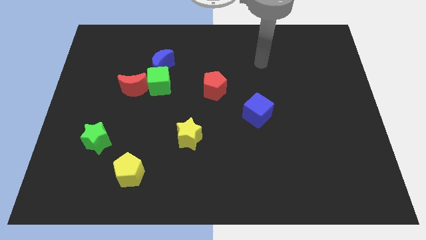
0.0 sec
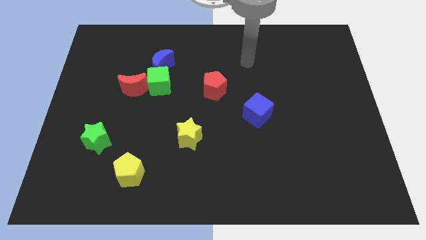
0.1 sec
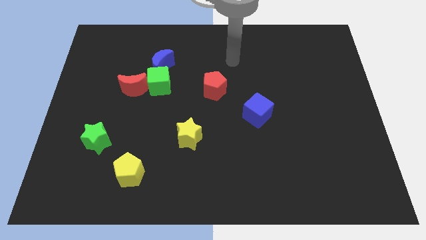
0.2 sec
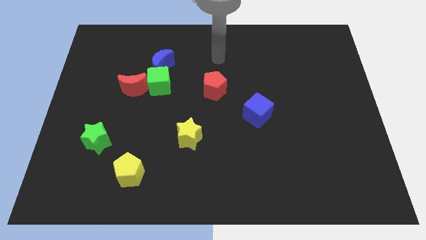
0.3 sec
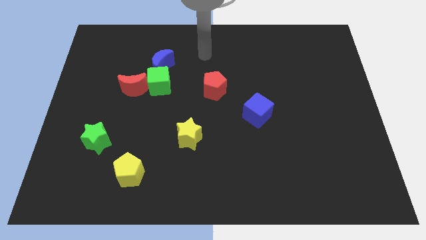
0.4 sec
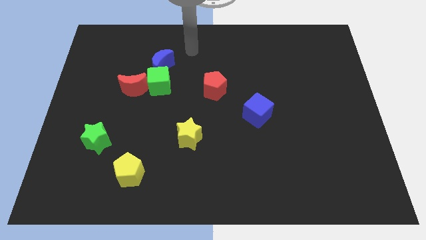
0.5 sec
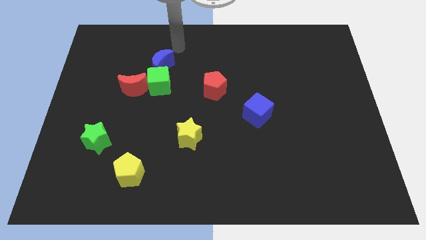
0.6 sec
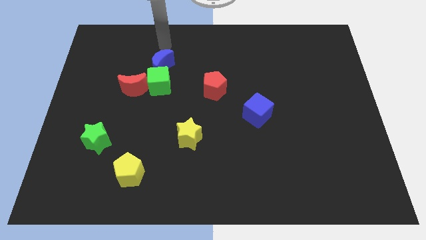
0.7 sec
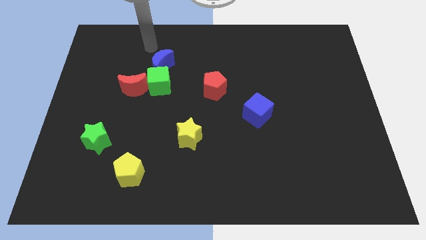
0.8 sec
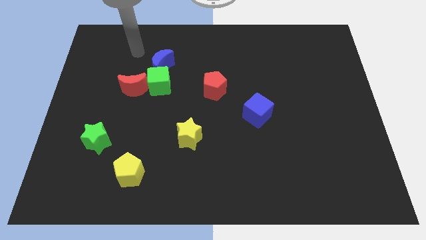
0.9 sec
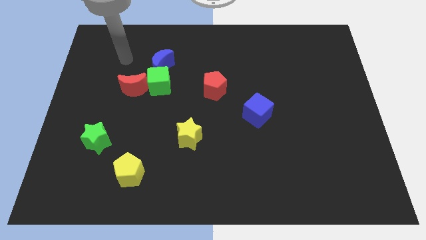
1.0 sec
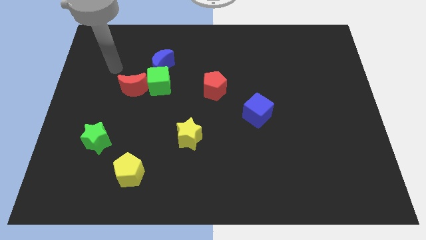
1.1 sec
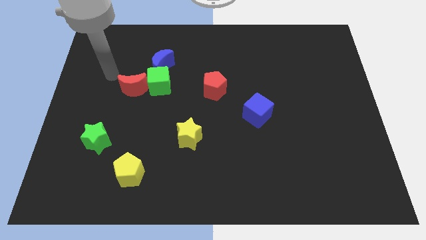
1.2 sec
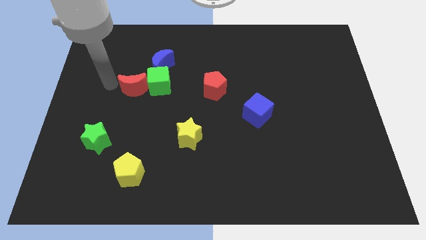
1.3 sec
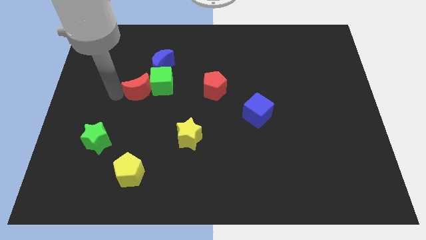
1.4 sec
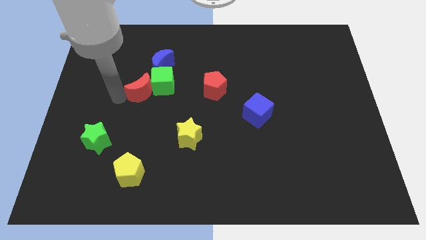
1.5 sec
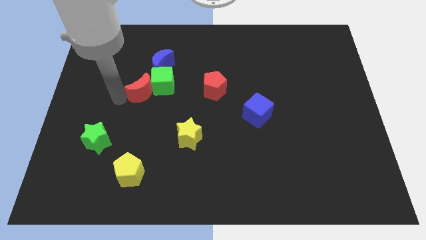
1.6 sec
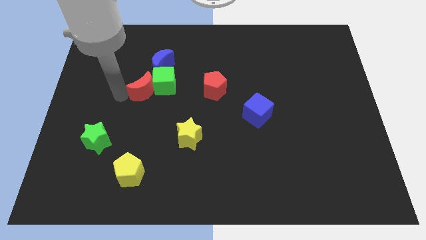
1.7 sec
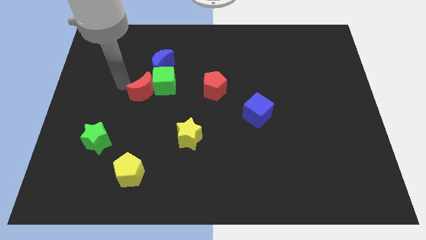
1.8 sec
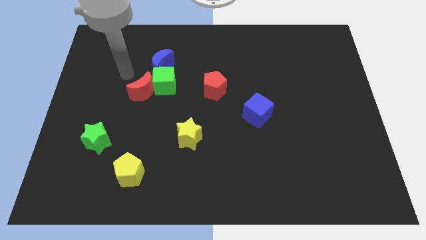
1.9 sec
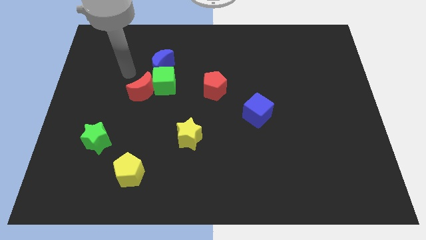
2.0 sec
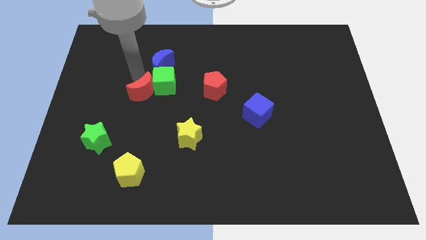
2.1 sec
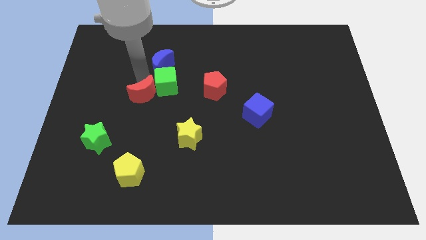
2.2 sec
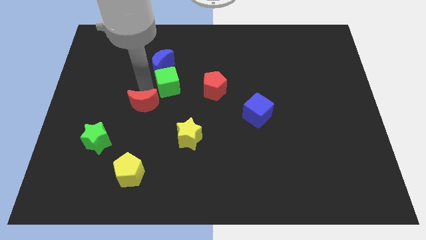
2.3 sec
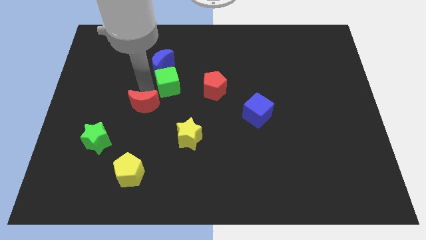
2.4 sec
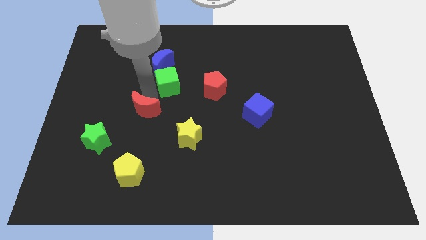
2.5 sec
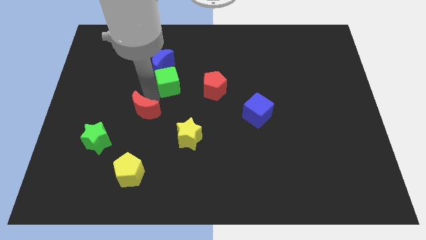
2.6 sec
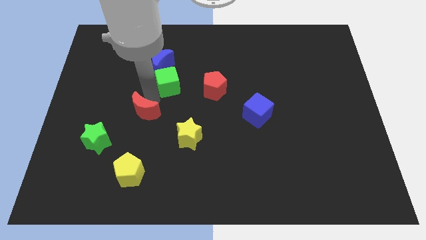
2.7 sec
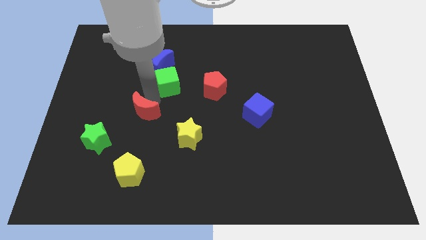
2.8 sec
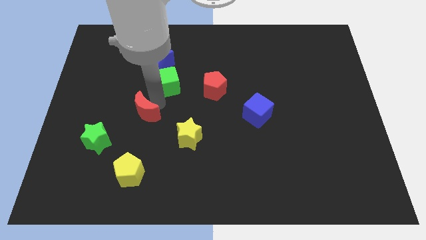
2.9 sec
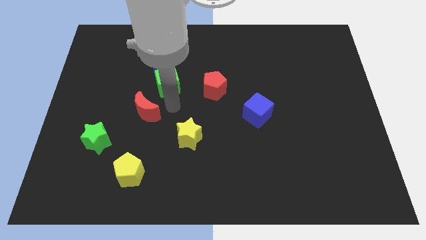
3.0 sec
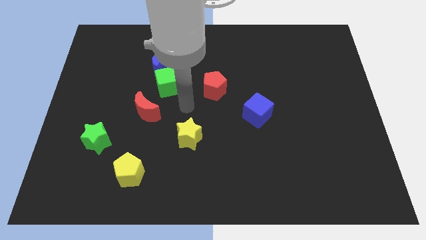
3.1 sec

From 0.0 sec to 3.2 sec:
move the red crescent to the bottom left side of the green cube

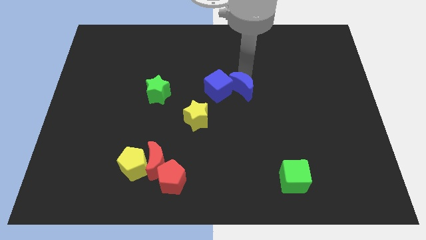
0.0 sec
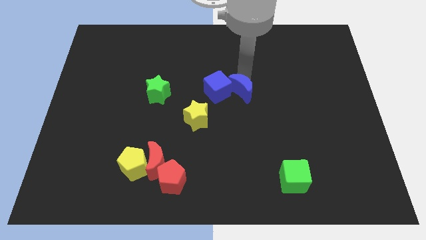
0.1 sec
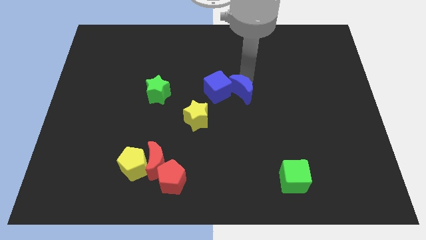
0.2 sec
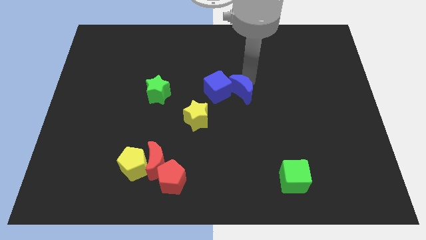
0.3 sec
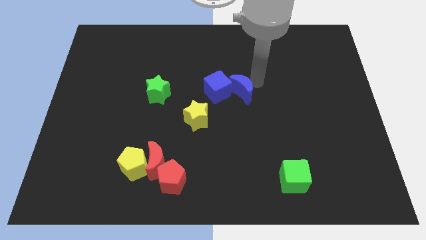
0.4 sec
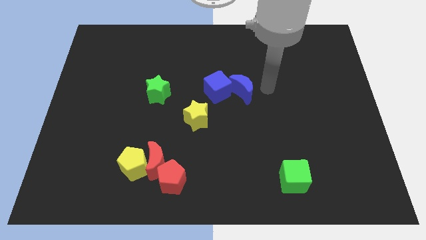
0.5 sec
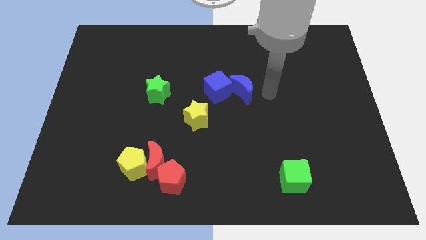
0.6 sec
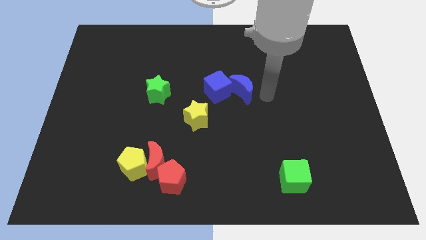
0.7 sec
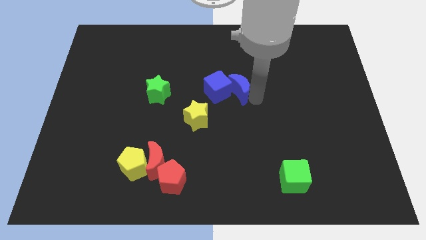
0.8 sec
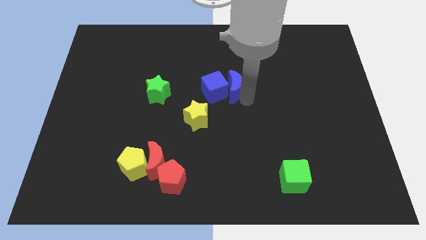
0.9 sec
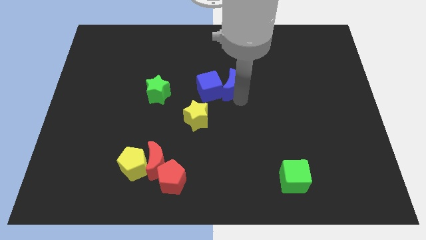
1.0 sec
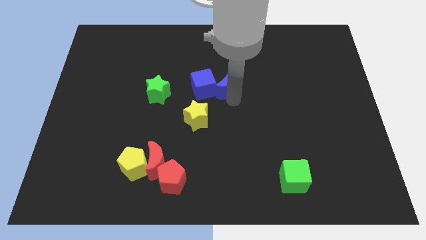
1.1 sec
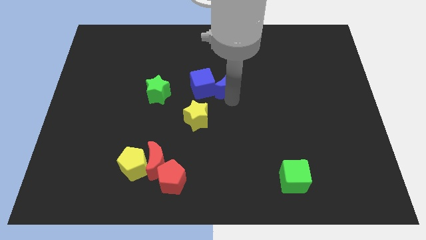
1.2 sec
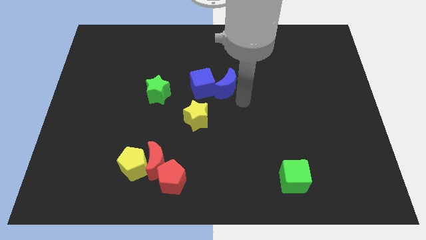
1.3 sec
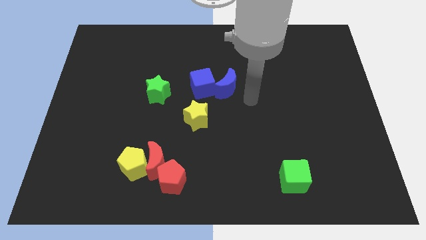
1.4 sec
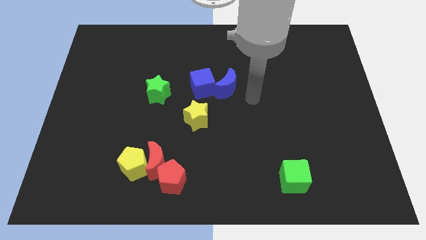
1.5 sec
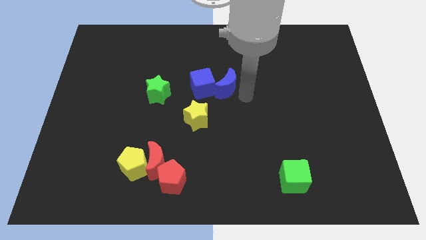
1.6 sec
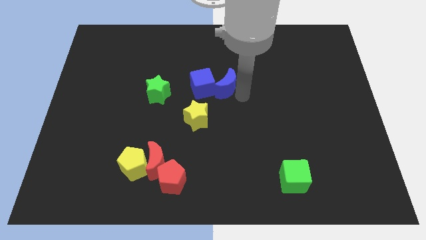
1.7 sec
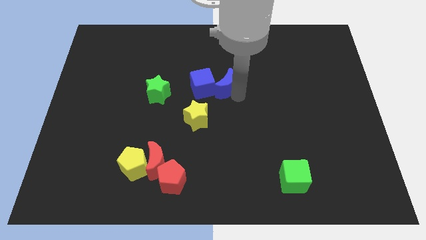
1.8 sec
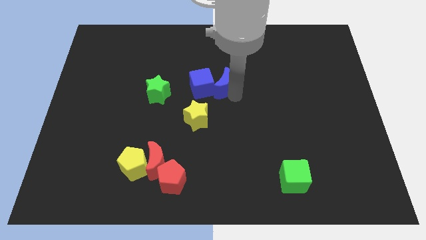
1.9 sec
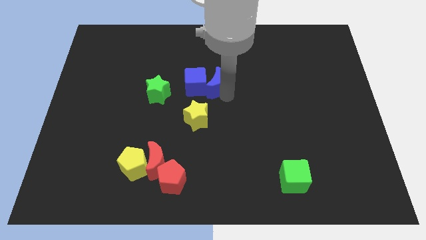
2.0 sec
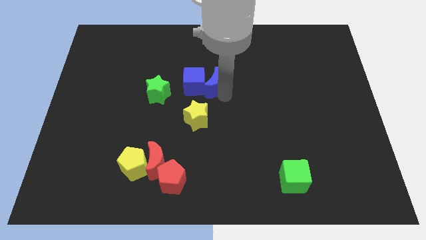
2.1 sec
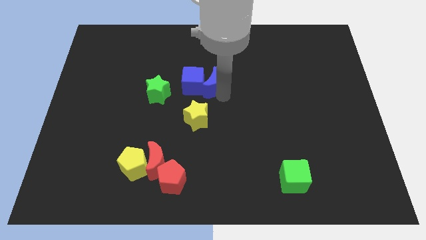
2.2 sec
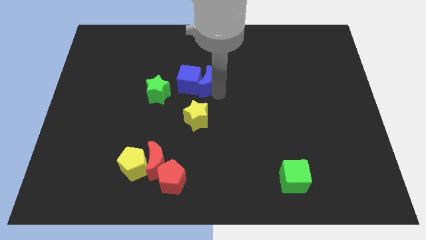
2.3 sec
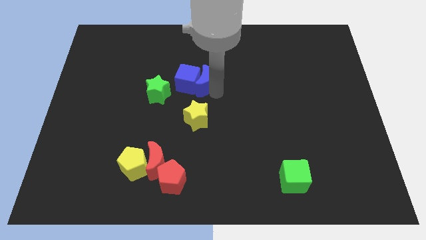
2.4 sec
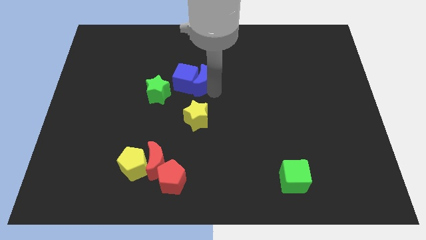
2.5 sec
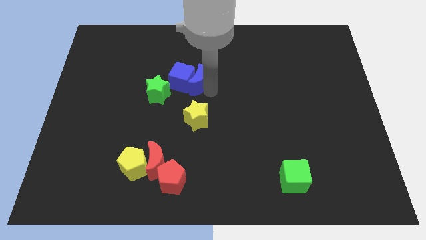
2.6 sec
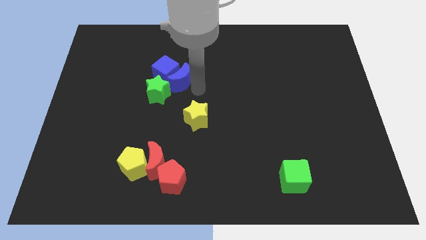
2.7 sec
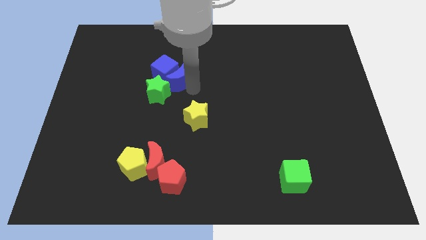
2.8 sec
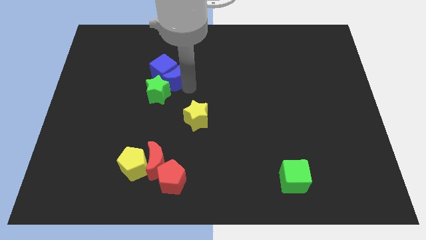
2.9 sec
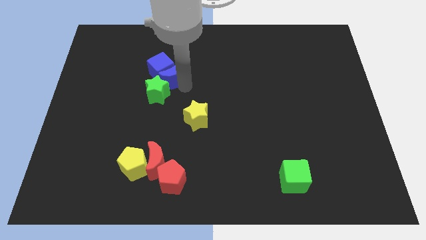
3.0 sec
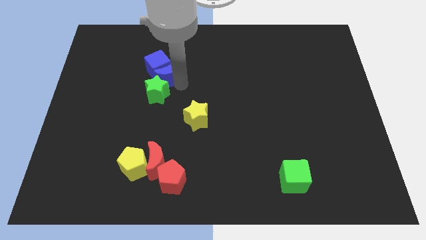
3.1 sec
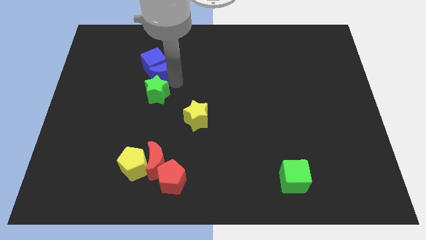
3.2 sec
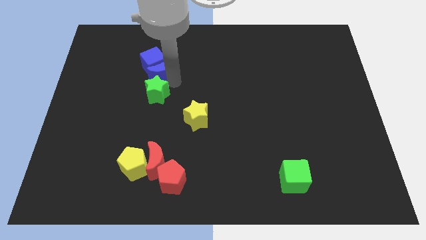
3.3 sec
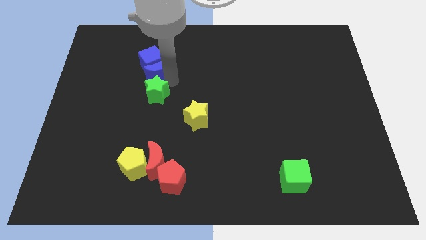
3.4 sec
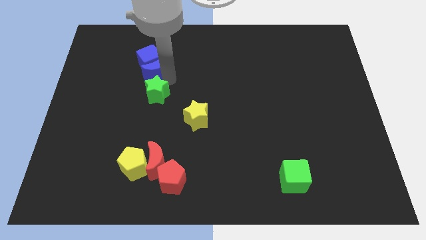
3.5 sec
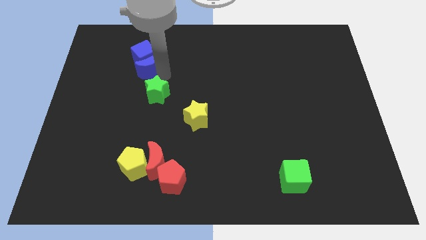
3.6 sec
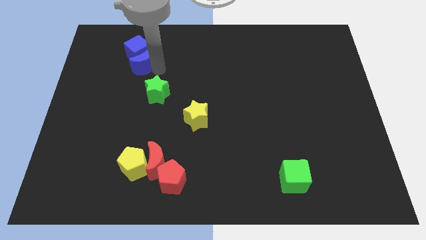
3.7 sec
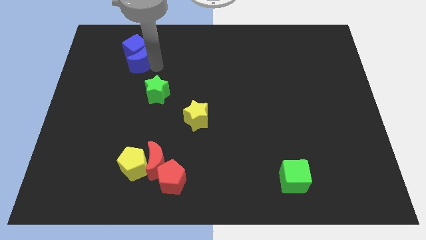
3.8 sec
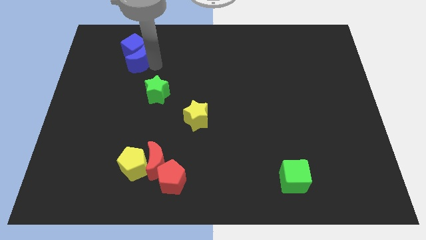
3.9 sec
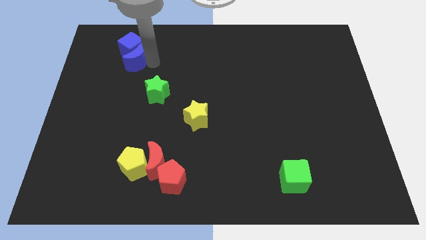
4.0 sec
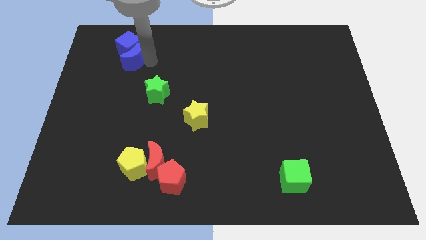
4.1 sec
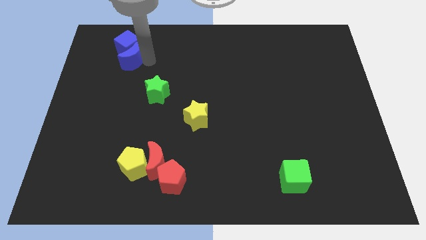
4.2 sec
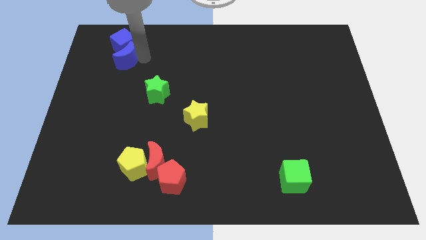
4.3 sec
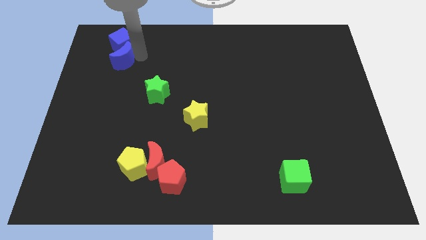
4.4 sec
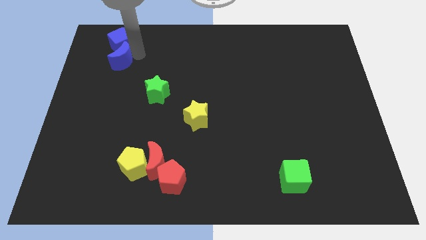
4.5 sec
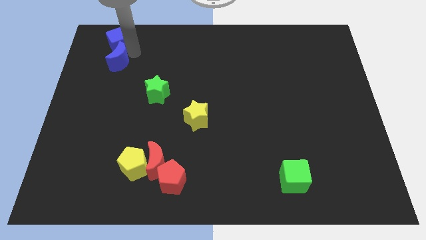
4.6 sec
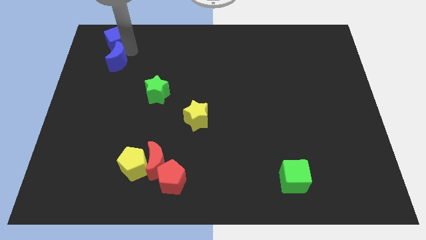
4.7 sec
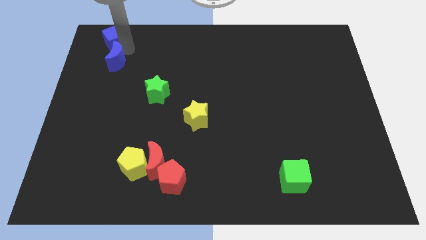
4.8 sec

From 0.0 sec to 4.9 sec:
move both the blue blocks towards the top left

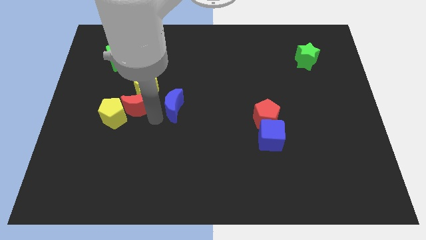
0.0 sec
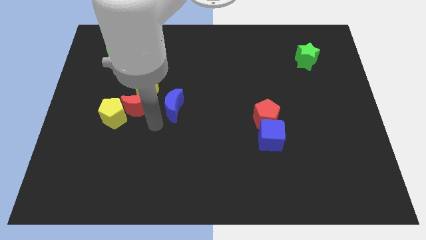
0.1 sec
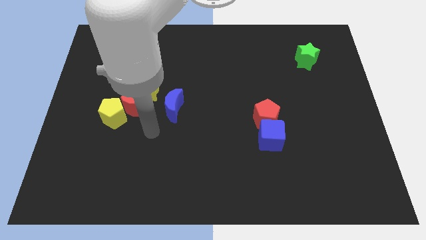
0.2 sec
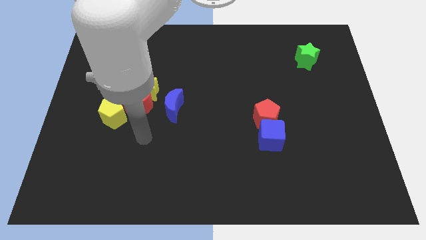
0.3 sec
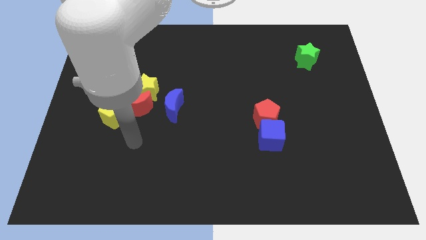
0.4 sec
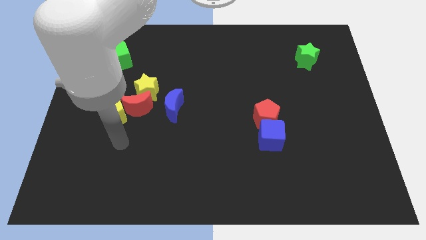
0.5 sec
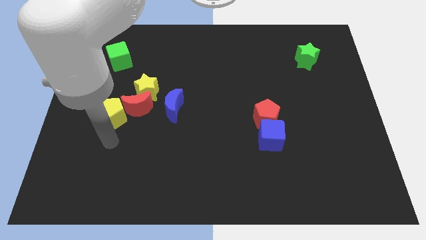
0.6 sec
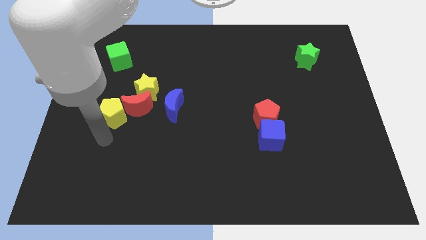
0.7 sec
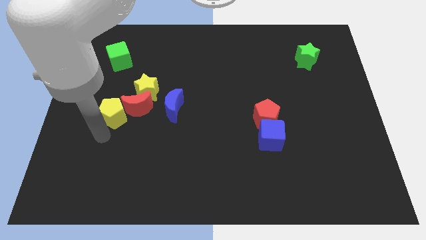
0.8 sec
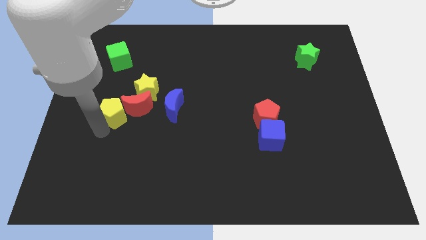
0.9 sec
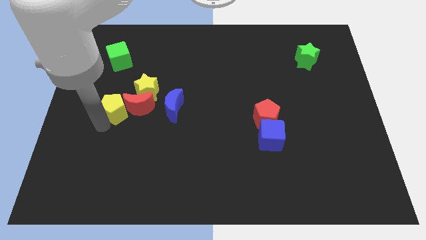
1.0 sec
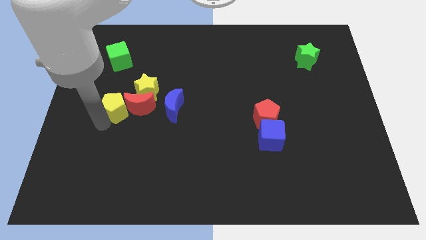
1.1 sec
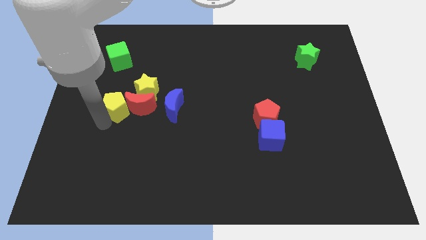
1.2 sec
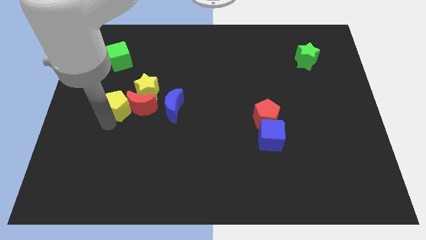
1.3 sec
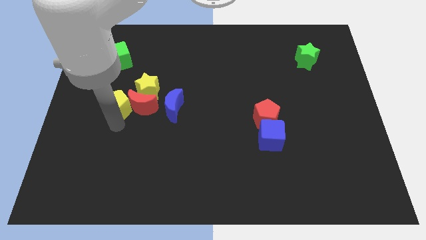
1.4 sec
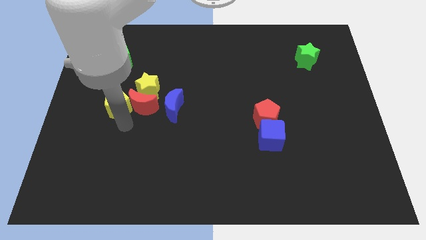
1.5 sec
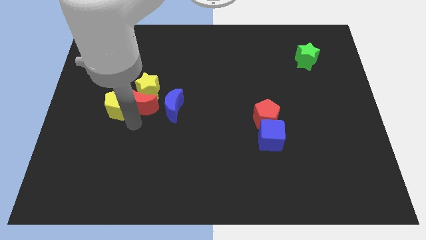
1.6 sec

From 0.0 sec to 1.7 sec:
slightly push yellow pentagon upside
